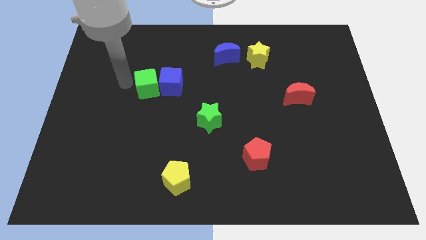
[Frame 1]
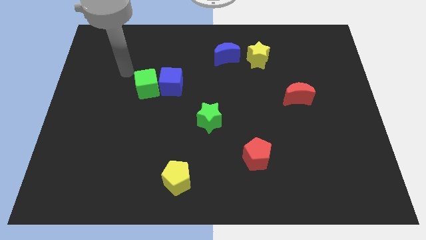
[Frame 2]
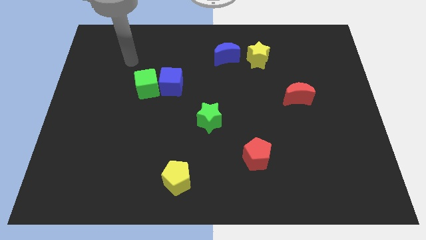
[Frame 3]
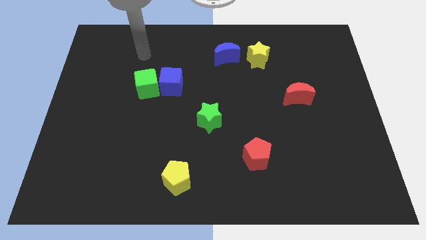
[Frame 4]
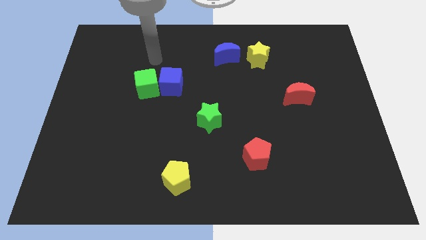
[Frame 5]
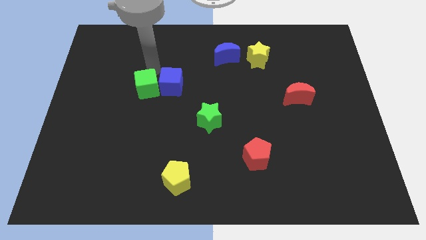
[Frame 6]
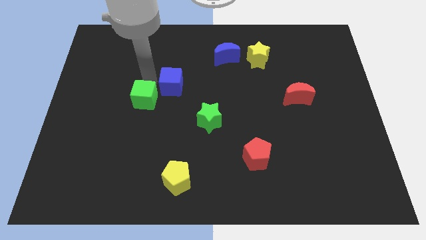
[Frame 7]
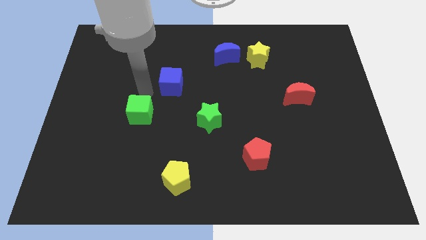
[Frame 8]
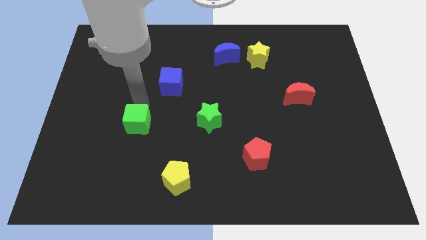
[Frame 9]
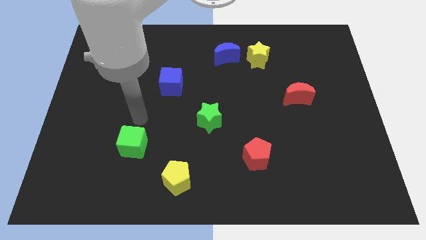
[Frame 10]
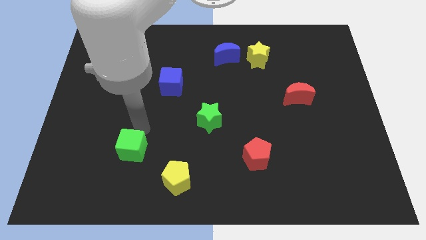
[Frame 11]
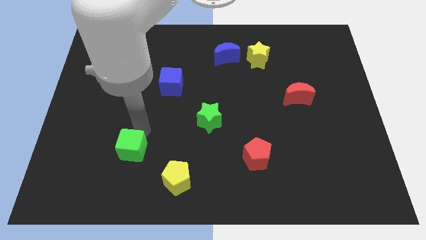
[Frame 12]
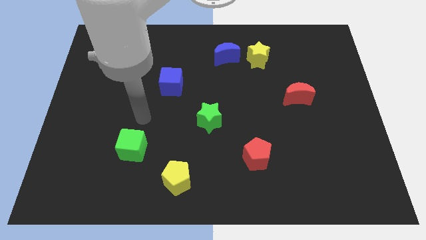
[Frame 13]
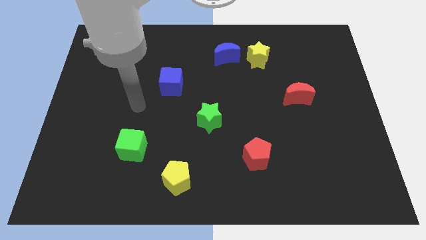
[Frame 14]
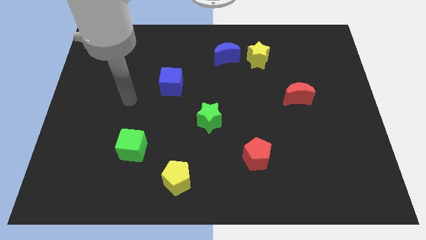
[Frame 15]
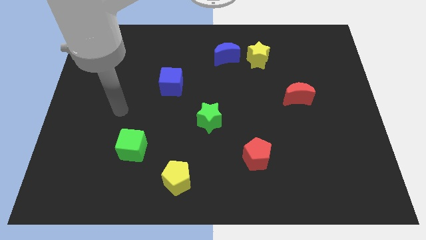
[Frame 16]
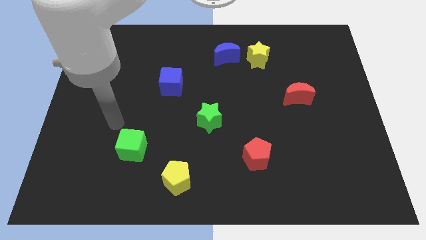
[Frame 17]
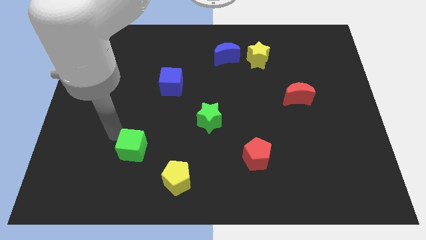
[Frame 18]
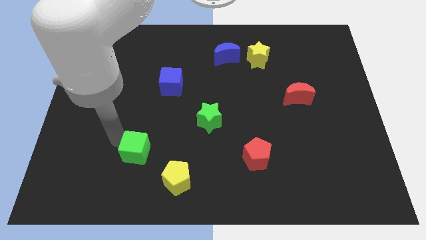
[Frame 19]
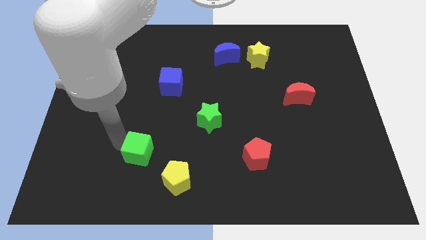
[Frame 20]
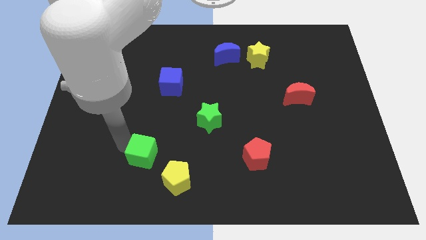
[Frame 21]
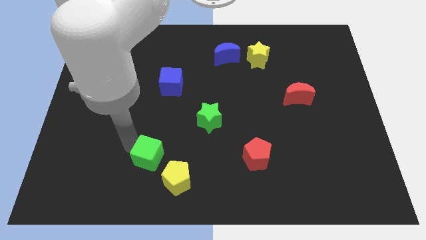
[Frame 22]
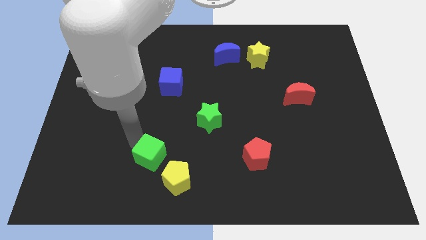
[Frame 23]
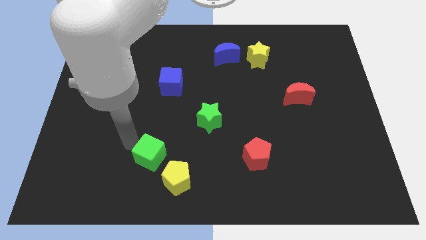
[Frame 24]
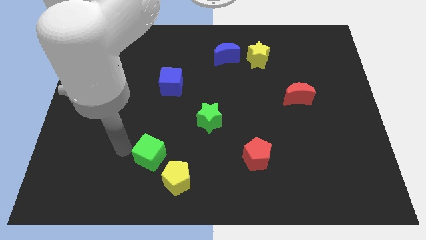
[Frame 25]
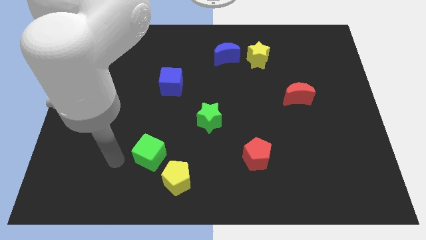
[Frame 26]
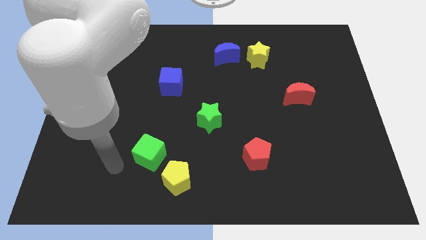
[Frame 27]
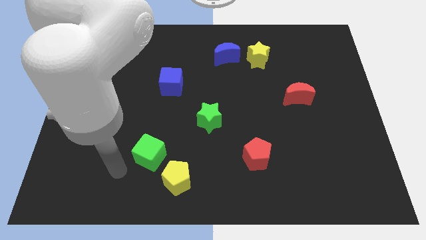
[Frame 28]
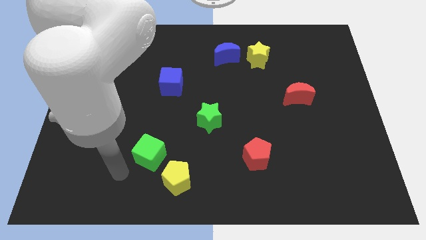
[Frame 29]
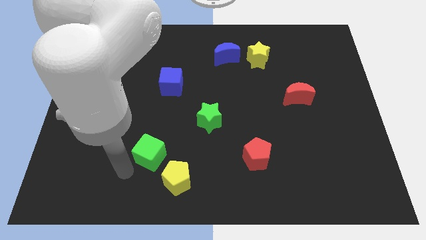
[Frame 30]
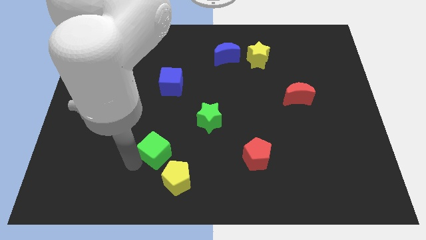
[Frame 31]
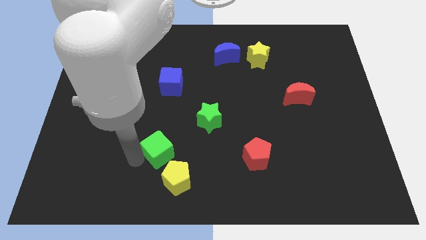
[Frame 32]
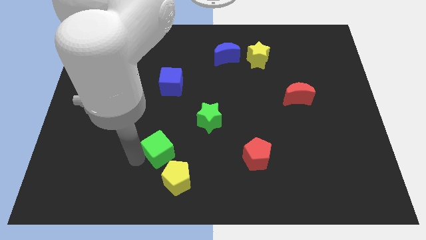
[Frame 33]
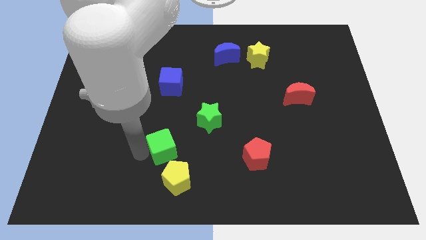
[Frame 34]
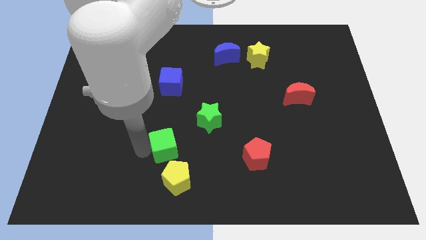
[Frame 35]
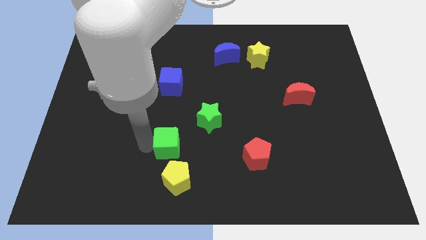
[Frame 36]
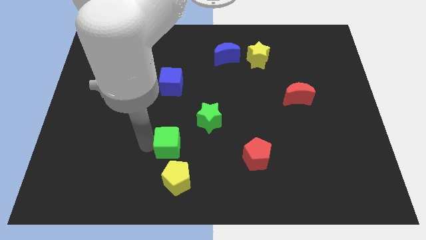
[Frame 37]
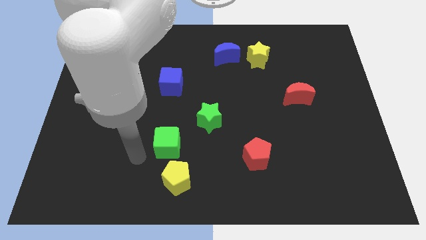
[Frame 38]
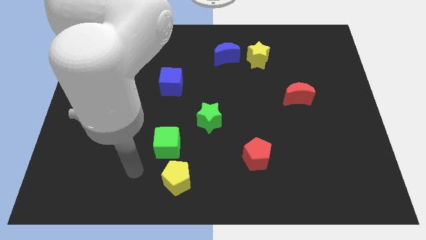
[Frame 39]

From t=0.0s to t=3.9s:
move the green cube above the yellow pentagon

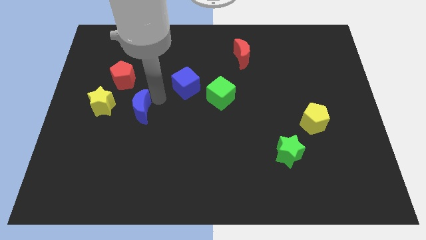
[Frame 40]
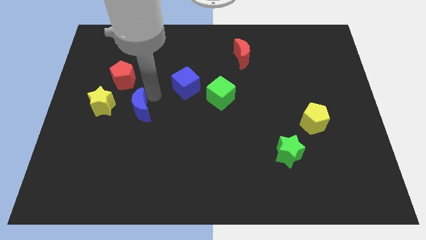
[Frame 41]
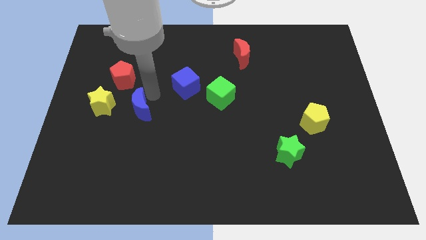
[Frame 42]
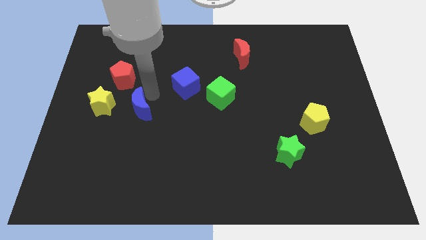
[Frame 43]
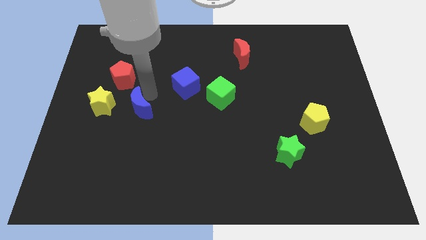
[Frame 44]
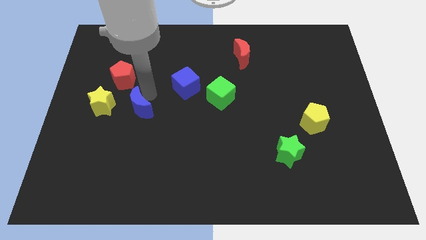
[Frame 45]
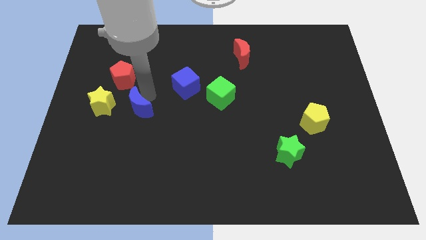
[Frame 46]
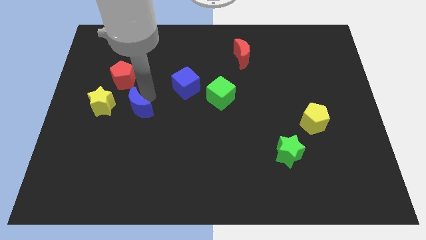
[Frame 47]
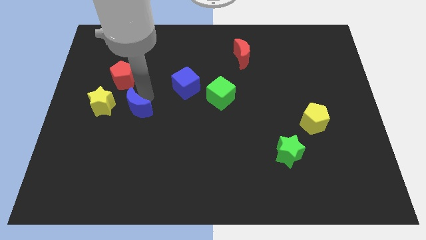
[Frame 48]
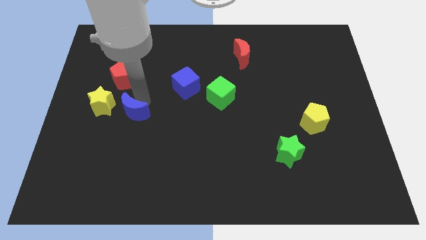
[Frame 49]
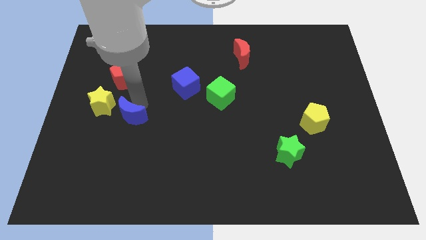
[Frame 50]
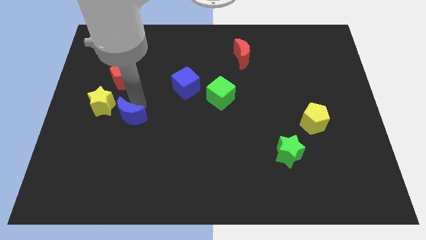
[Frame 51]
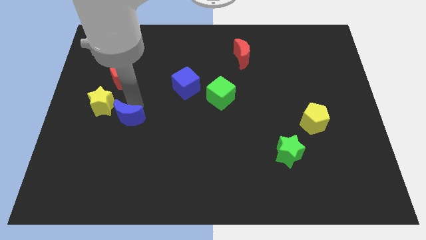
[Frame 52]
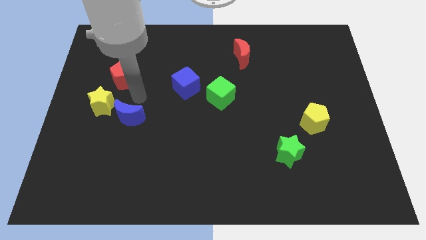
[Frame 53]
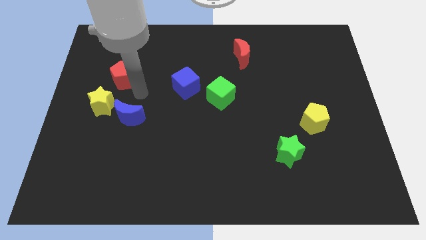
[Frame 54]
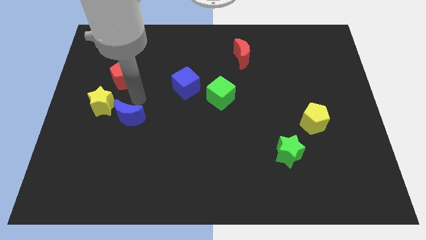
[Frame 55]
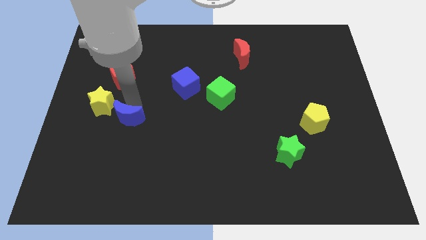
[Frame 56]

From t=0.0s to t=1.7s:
push the blue crescent towards the yellow star

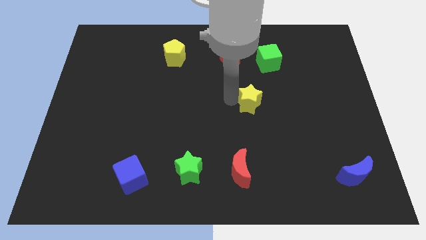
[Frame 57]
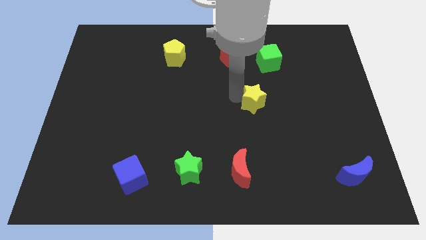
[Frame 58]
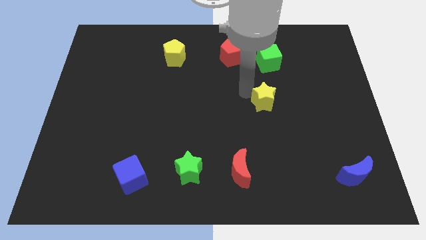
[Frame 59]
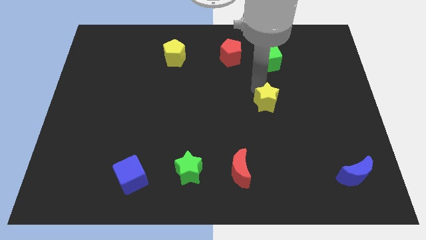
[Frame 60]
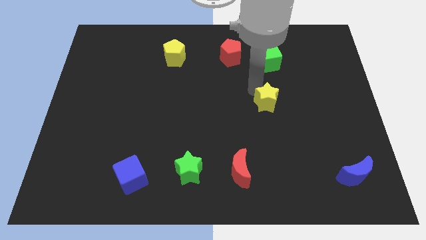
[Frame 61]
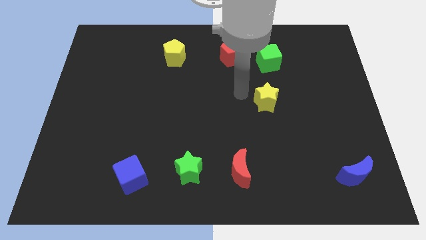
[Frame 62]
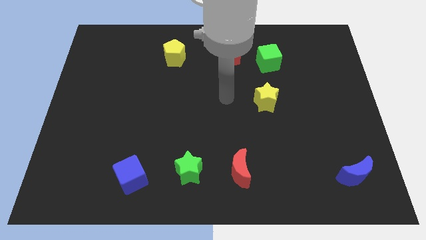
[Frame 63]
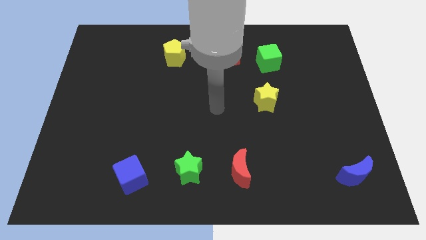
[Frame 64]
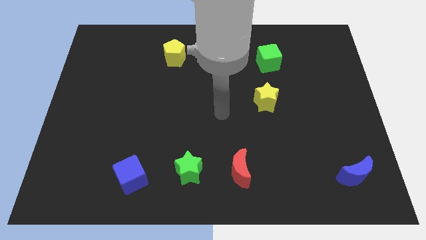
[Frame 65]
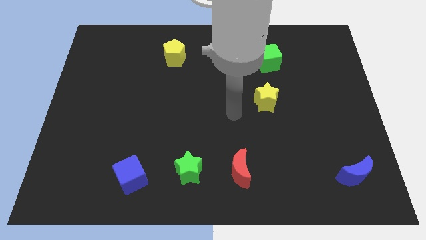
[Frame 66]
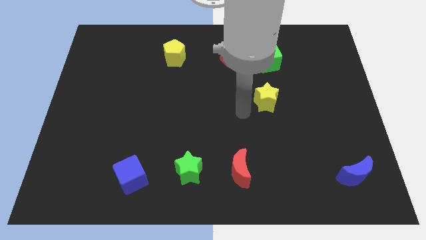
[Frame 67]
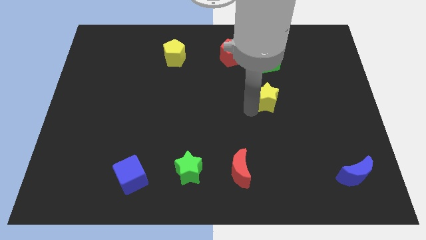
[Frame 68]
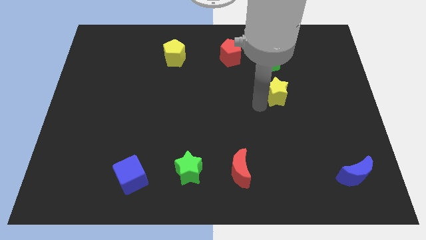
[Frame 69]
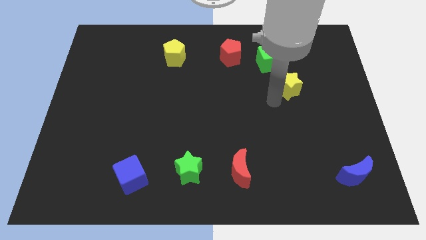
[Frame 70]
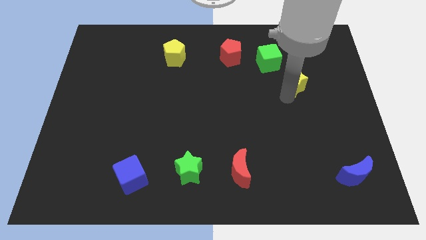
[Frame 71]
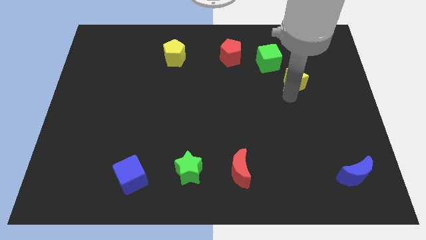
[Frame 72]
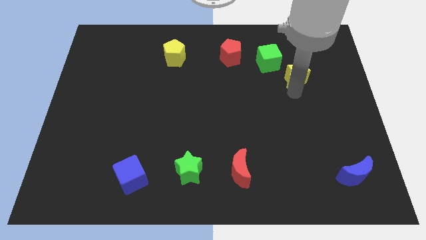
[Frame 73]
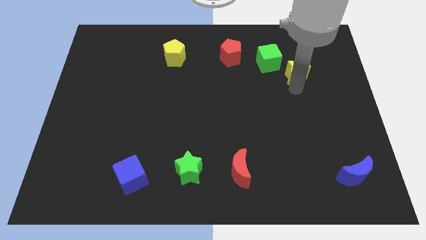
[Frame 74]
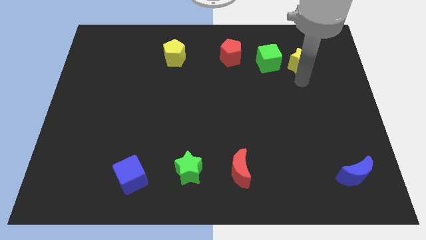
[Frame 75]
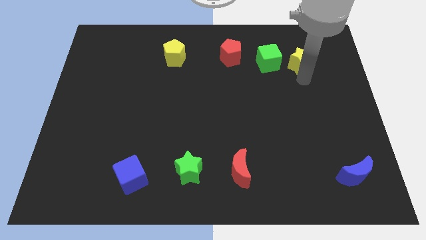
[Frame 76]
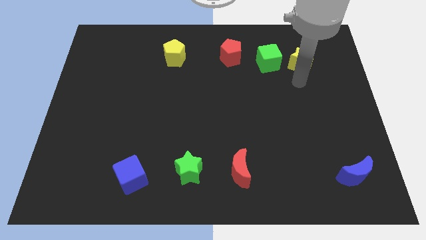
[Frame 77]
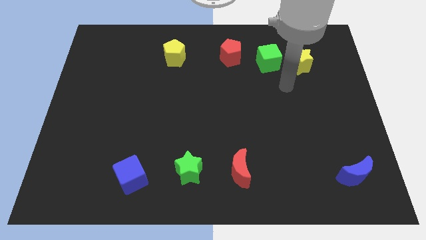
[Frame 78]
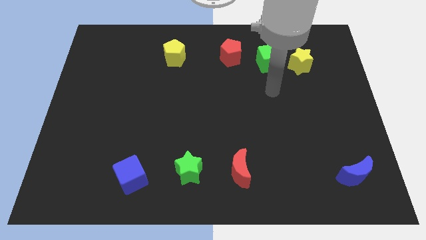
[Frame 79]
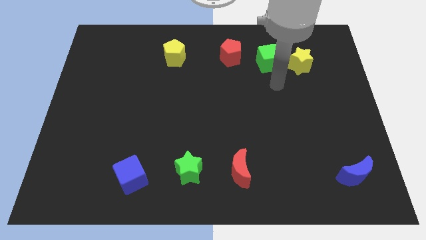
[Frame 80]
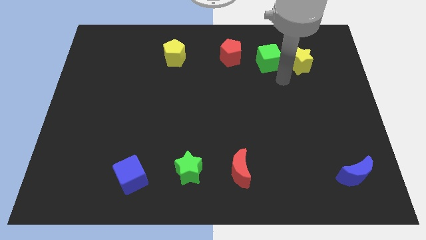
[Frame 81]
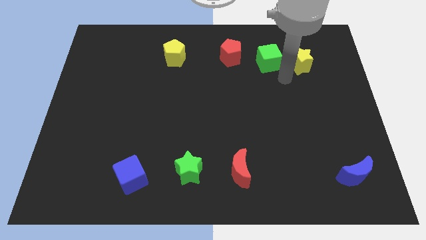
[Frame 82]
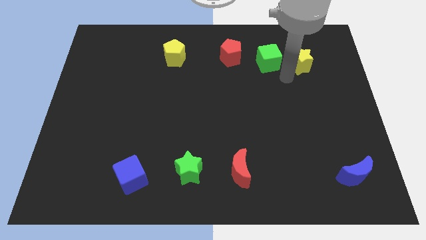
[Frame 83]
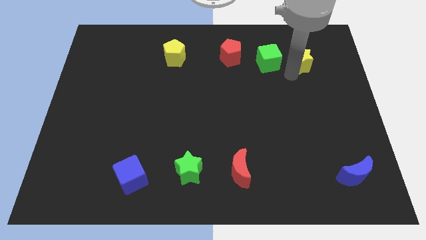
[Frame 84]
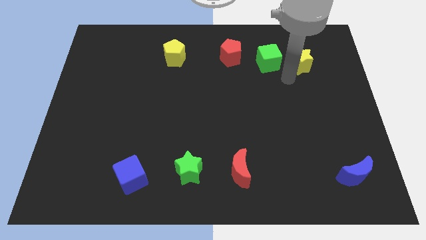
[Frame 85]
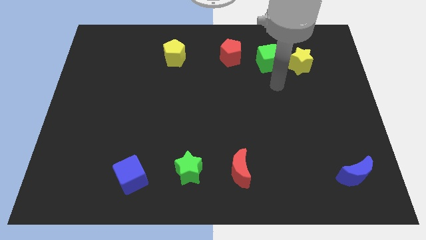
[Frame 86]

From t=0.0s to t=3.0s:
push the yellow star to the right side of the green cube

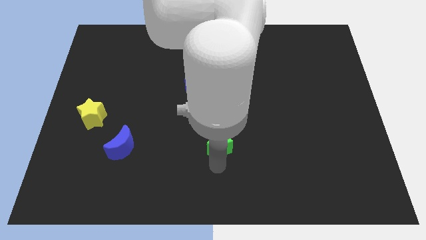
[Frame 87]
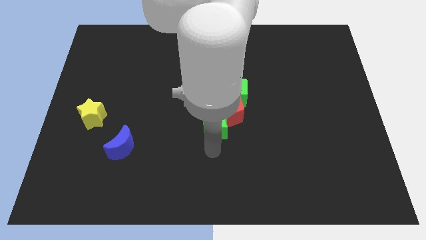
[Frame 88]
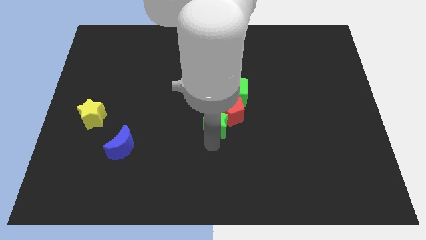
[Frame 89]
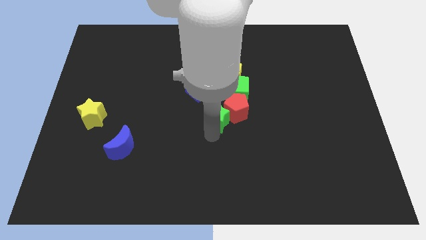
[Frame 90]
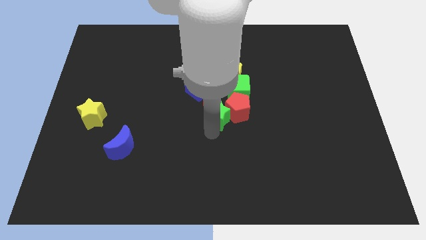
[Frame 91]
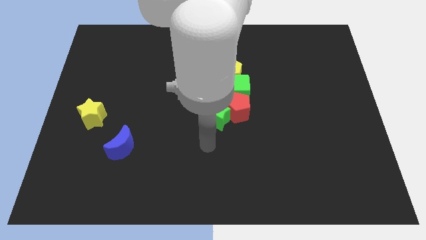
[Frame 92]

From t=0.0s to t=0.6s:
push green star into group of blocks
